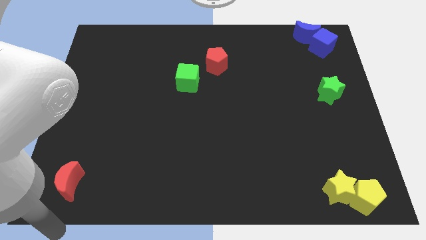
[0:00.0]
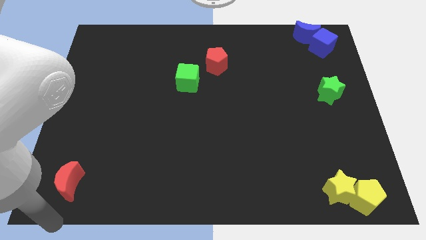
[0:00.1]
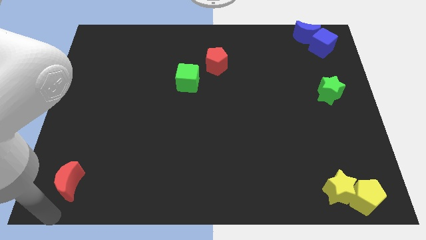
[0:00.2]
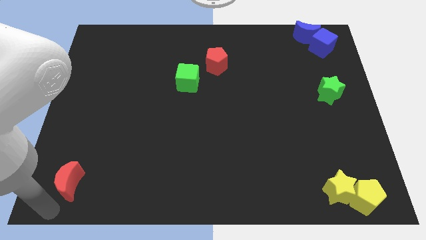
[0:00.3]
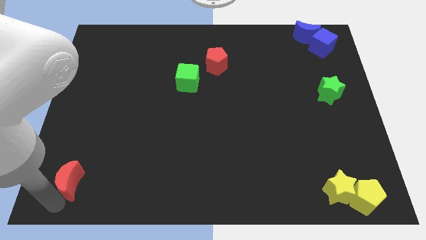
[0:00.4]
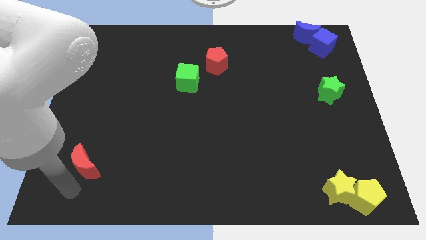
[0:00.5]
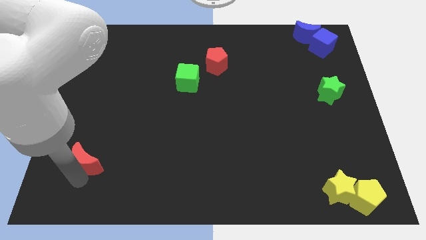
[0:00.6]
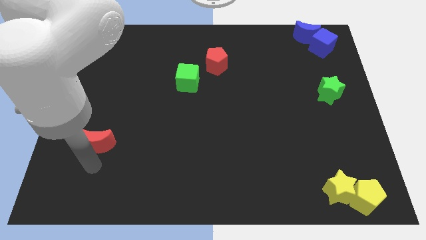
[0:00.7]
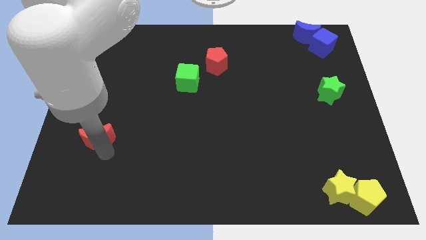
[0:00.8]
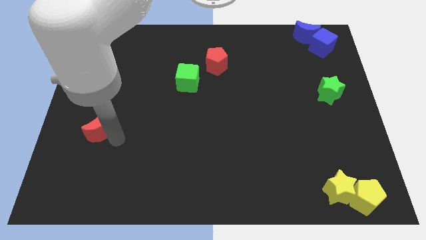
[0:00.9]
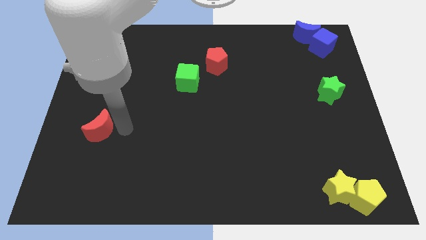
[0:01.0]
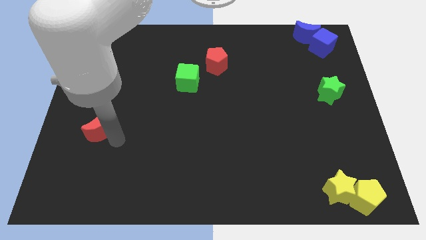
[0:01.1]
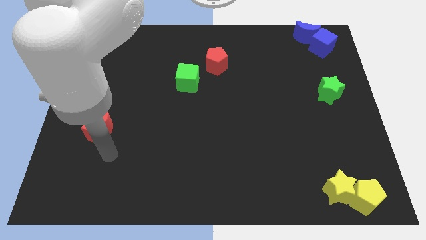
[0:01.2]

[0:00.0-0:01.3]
push the red moon upward

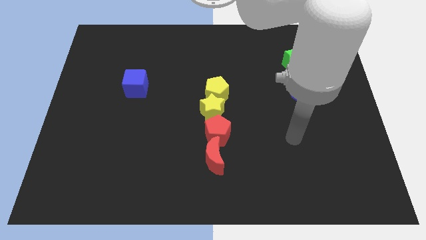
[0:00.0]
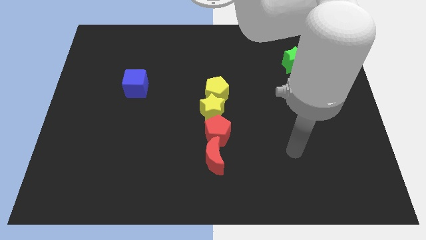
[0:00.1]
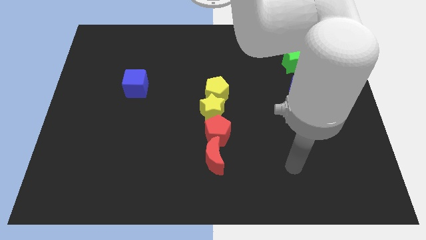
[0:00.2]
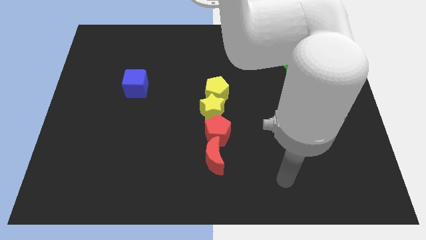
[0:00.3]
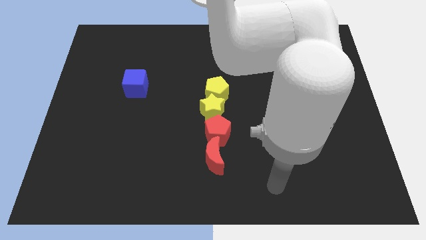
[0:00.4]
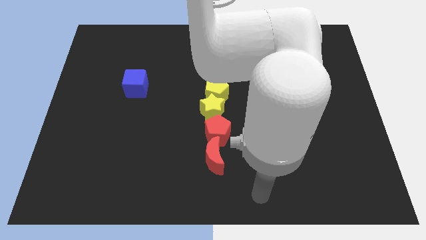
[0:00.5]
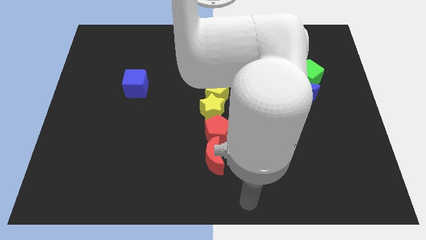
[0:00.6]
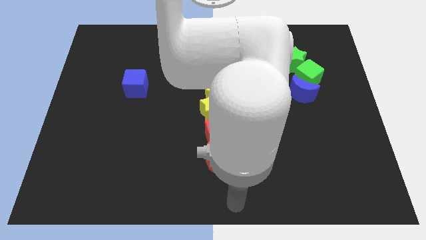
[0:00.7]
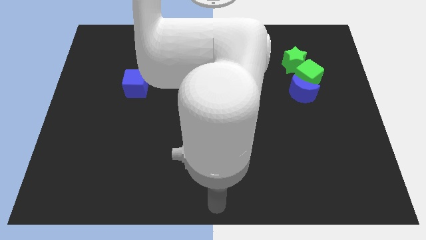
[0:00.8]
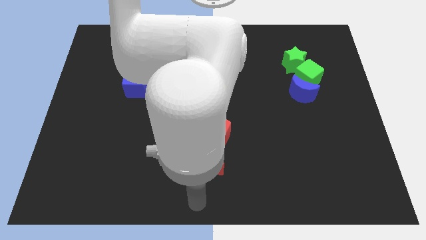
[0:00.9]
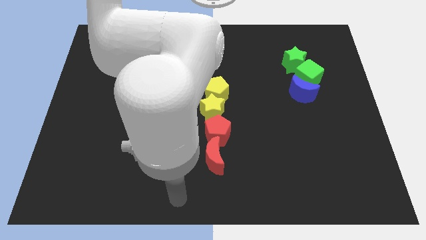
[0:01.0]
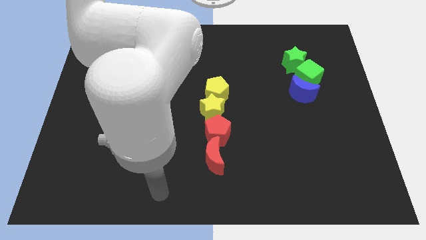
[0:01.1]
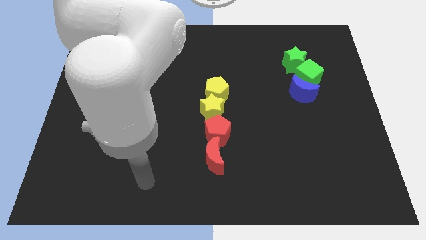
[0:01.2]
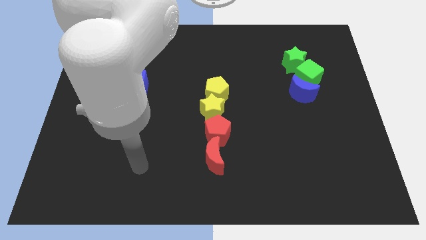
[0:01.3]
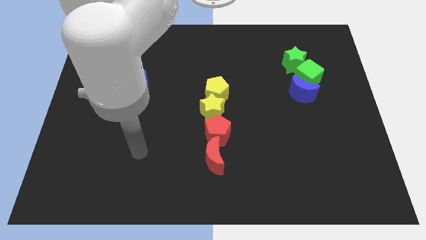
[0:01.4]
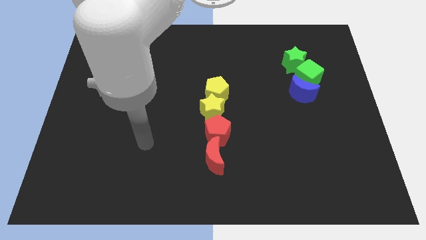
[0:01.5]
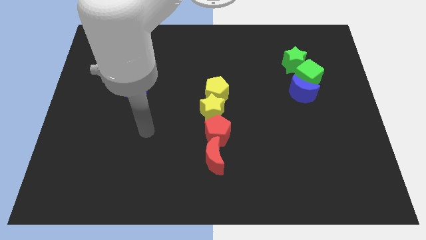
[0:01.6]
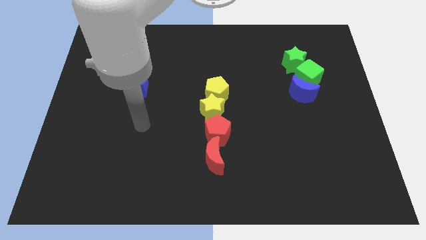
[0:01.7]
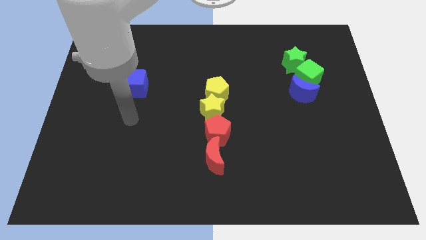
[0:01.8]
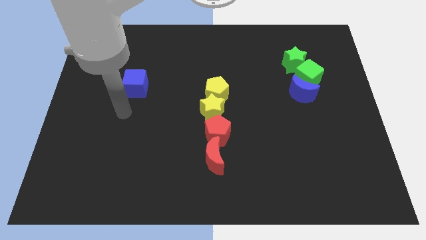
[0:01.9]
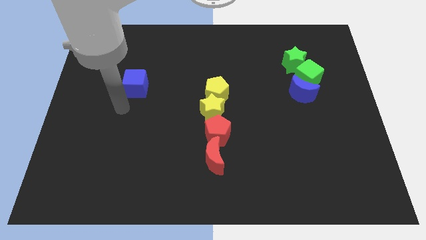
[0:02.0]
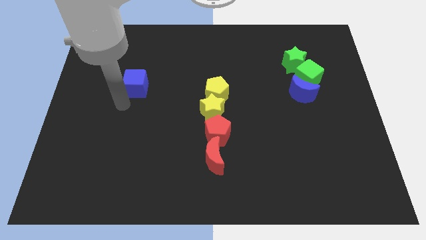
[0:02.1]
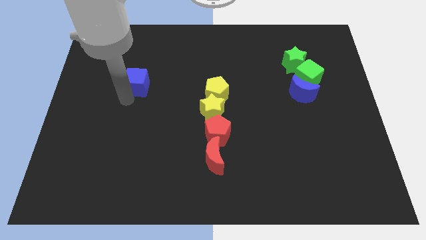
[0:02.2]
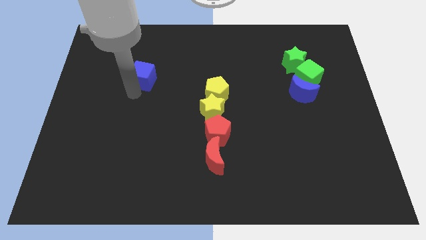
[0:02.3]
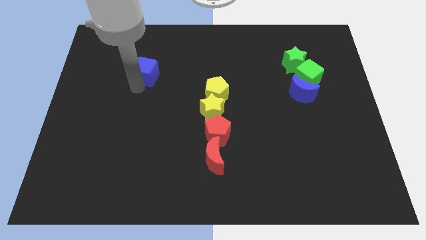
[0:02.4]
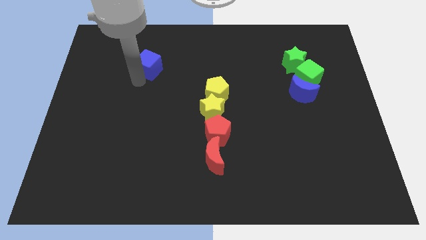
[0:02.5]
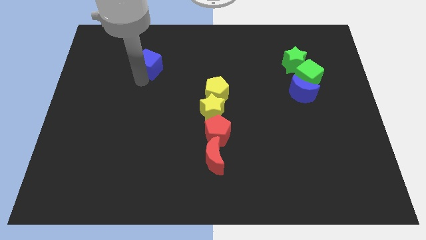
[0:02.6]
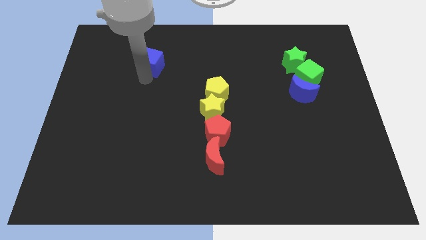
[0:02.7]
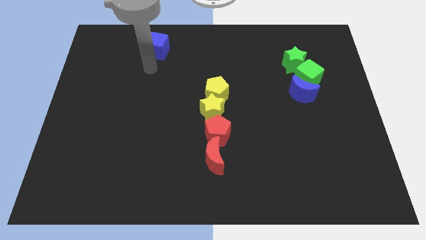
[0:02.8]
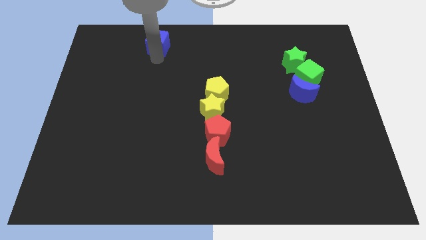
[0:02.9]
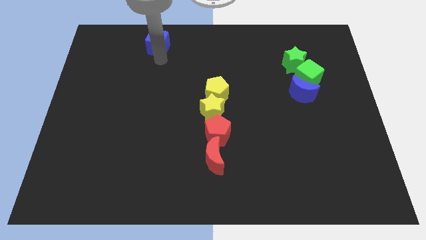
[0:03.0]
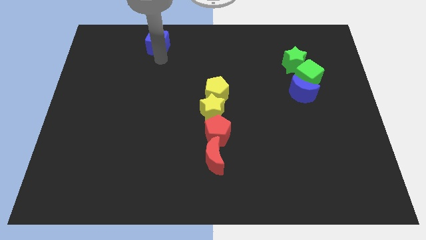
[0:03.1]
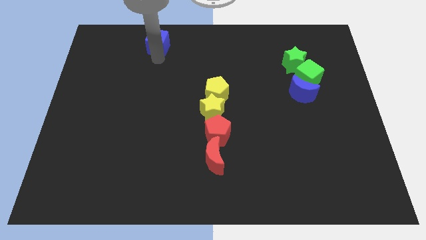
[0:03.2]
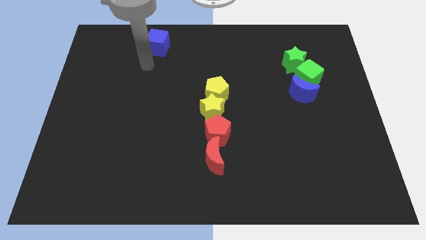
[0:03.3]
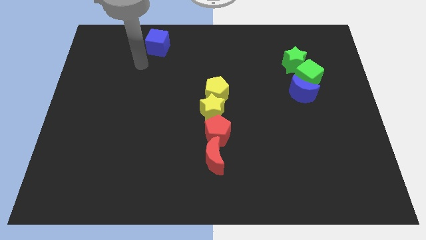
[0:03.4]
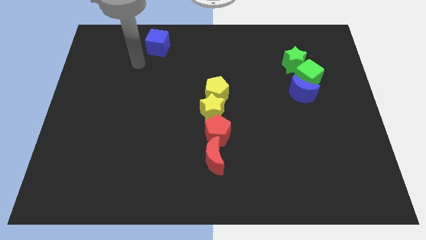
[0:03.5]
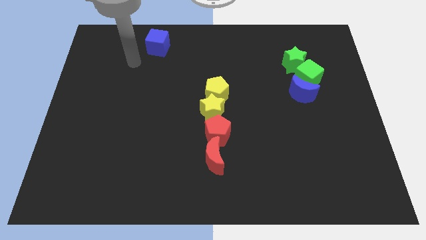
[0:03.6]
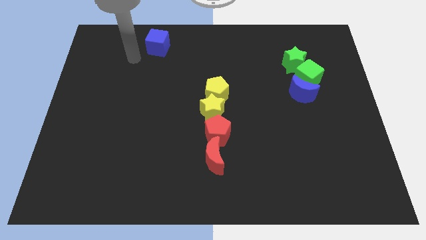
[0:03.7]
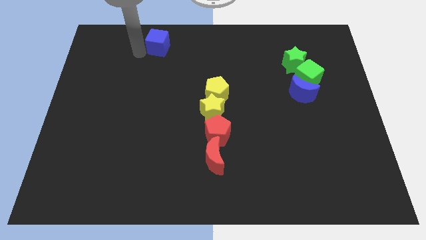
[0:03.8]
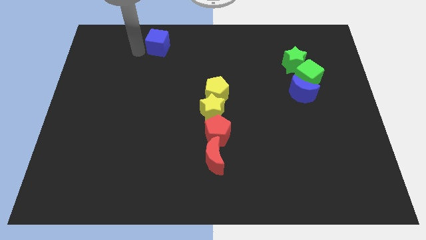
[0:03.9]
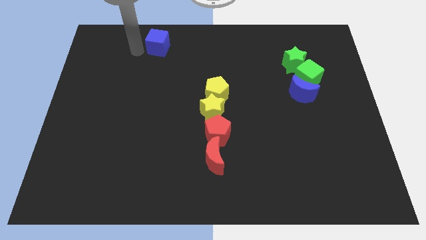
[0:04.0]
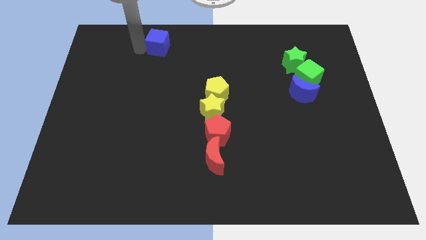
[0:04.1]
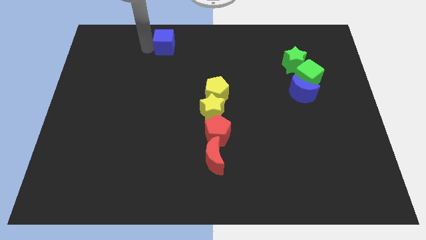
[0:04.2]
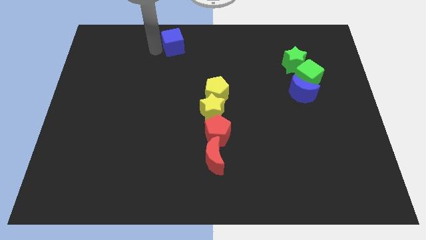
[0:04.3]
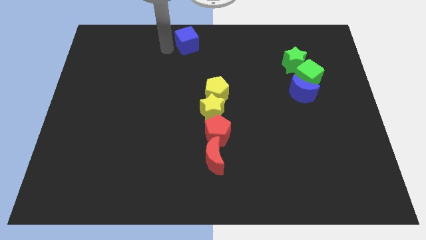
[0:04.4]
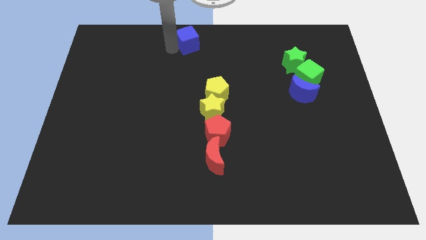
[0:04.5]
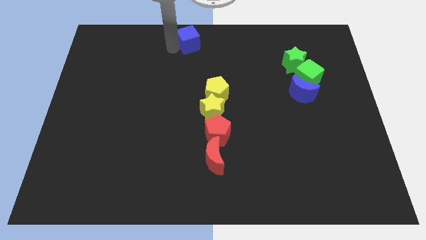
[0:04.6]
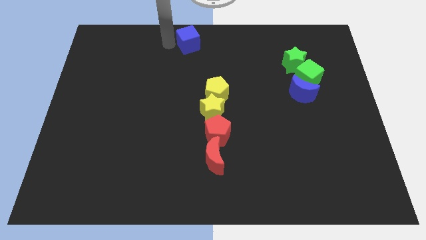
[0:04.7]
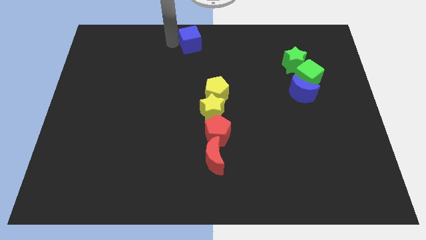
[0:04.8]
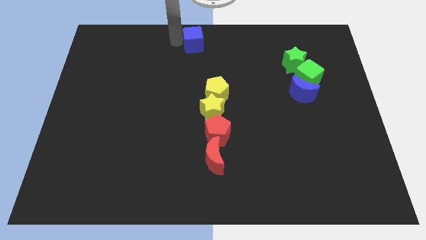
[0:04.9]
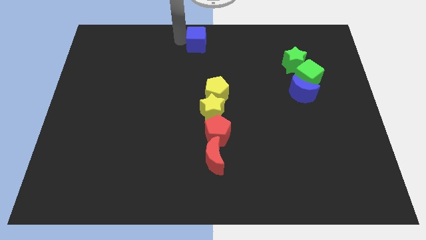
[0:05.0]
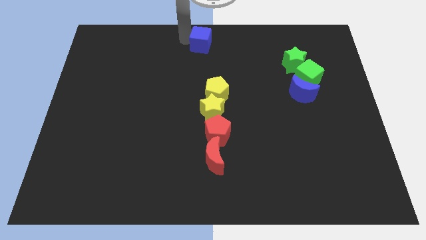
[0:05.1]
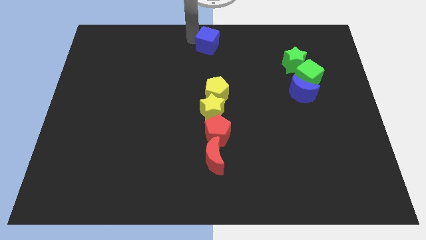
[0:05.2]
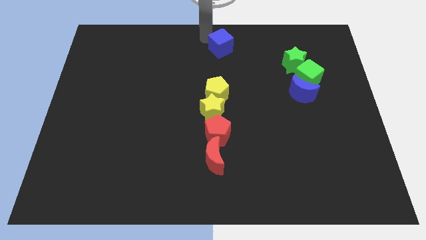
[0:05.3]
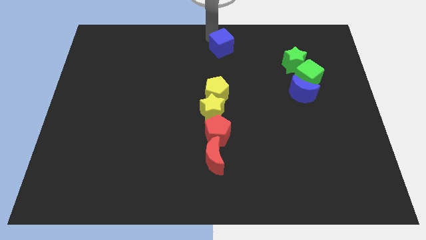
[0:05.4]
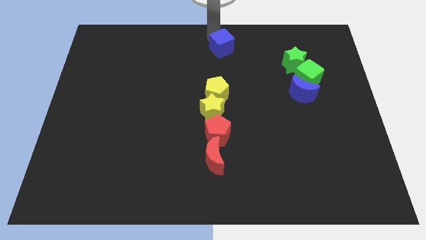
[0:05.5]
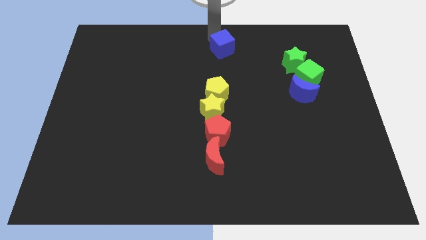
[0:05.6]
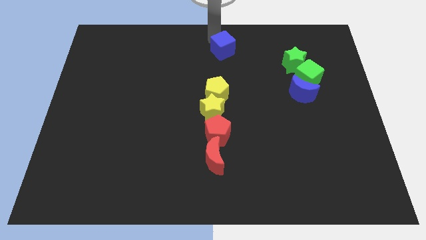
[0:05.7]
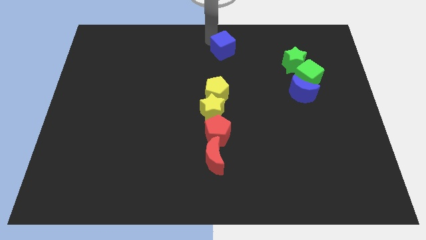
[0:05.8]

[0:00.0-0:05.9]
move blue cube on the top center of the board

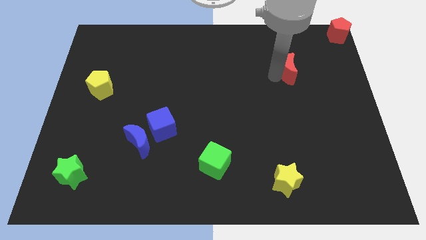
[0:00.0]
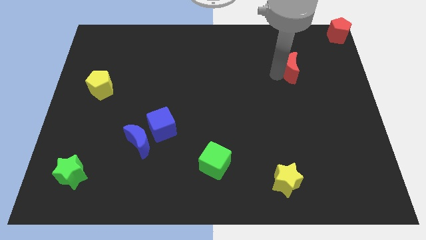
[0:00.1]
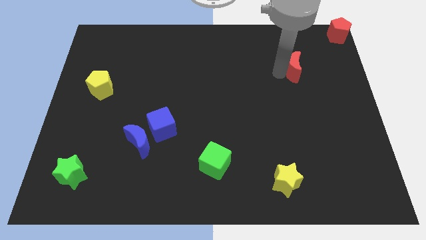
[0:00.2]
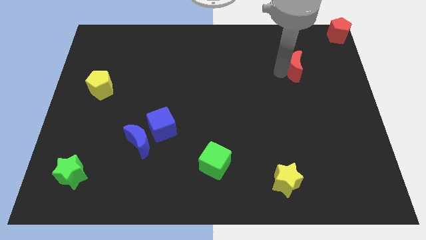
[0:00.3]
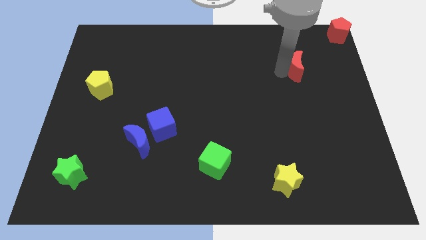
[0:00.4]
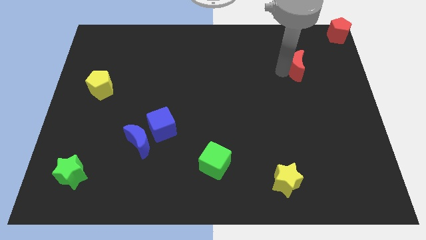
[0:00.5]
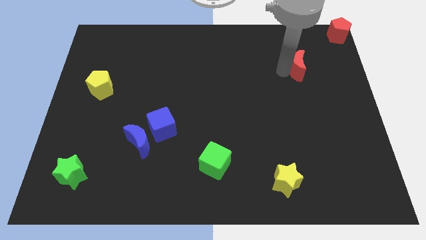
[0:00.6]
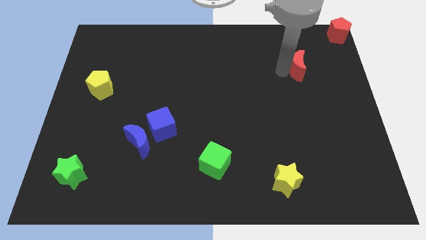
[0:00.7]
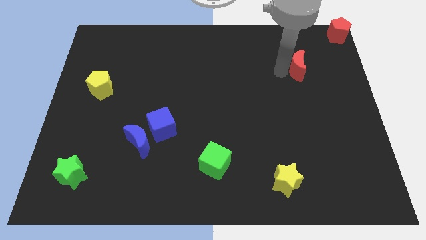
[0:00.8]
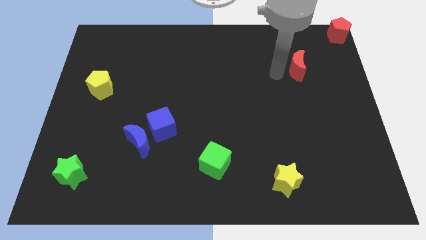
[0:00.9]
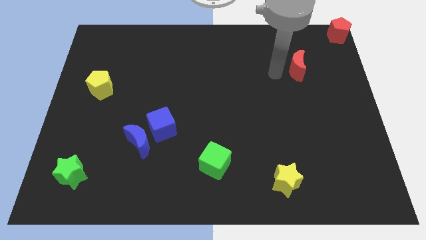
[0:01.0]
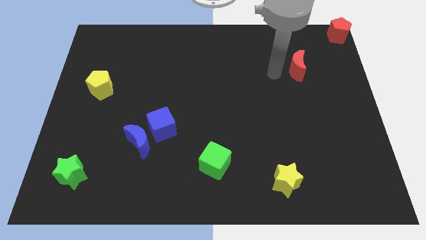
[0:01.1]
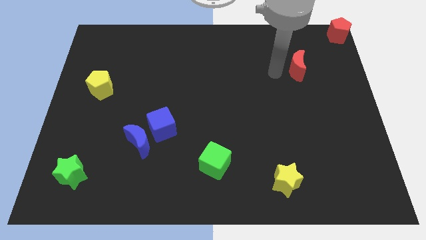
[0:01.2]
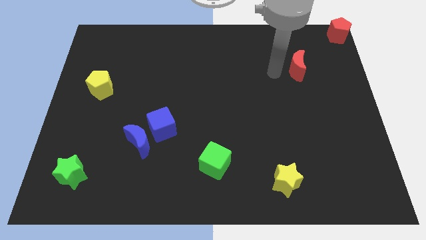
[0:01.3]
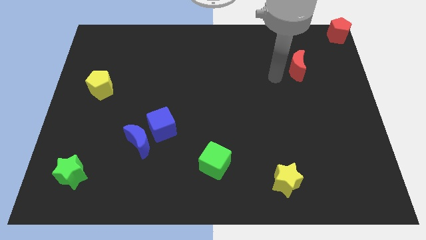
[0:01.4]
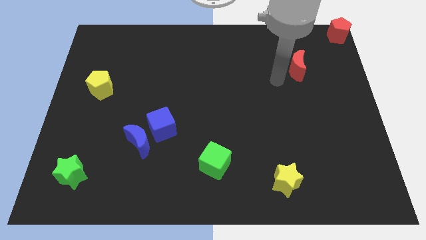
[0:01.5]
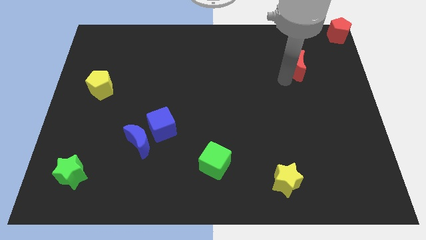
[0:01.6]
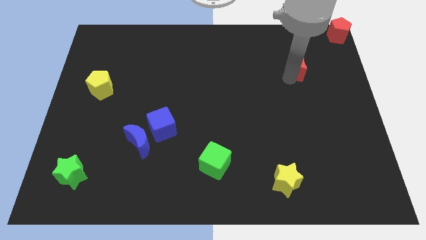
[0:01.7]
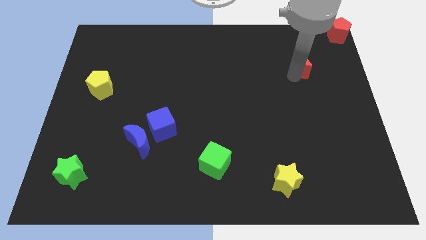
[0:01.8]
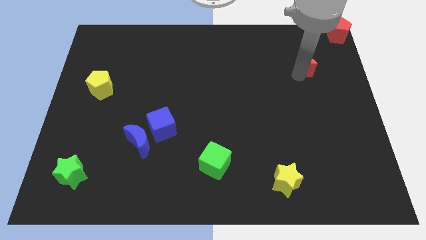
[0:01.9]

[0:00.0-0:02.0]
push the red crescent towards the top right
